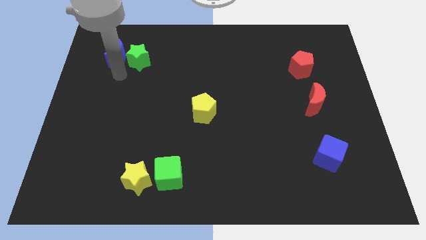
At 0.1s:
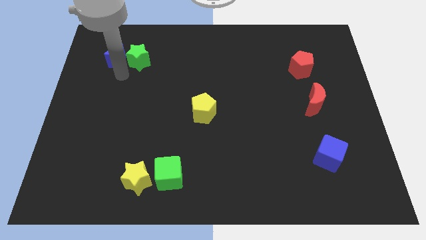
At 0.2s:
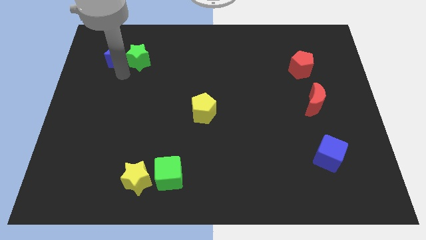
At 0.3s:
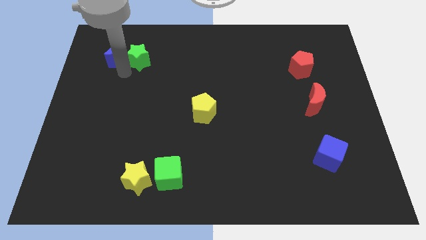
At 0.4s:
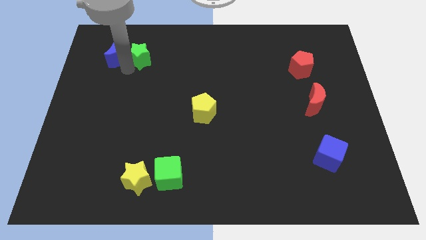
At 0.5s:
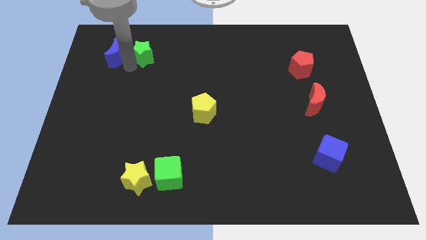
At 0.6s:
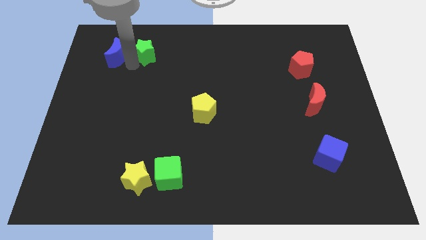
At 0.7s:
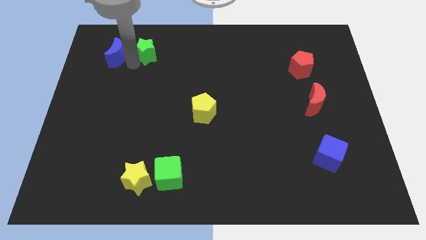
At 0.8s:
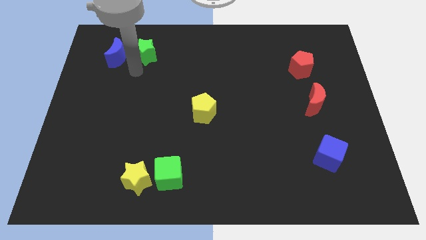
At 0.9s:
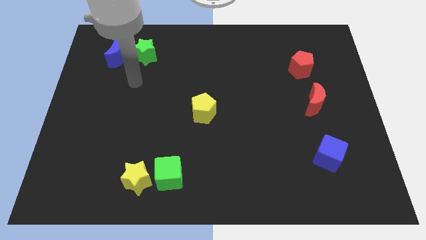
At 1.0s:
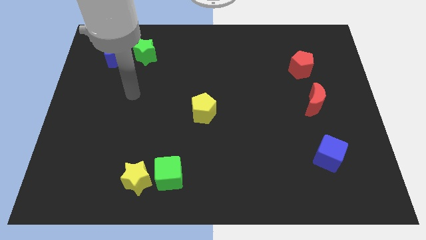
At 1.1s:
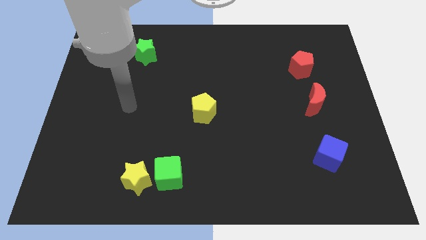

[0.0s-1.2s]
push the green star slightly to the top

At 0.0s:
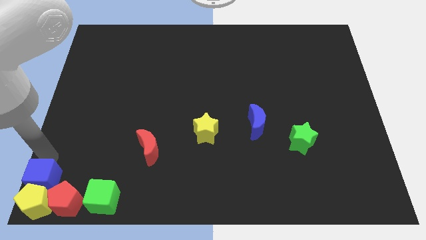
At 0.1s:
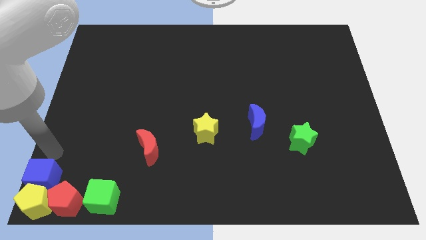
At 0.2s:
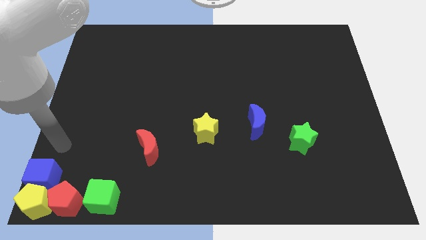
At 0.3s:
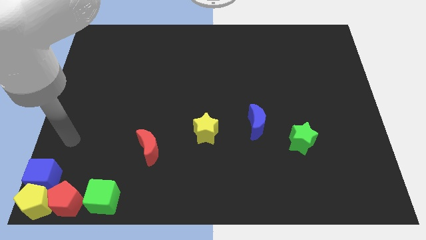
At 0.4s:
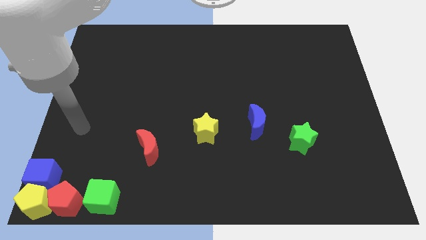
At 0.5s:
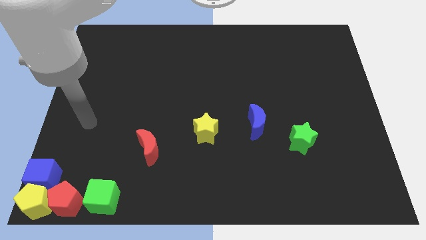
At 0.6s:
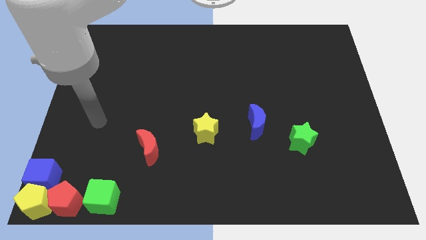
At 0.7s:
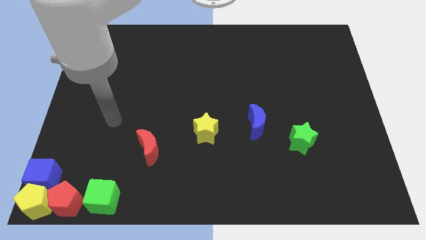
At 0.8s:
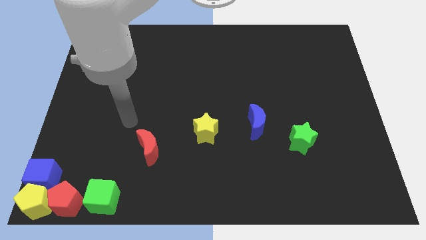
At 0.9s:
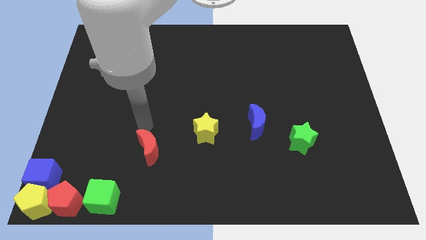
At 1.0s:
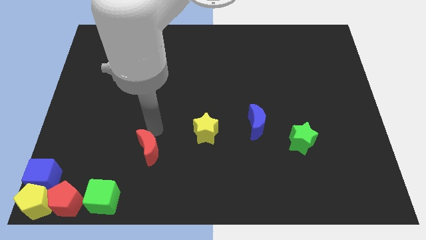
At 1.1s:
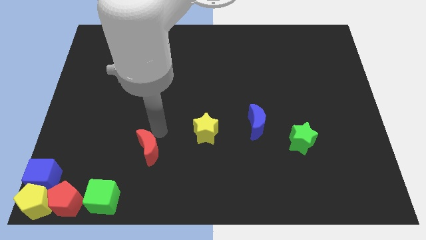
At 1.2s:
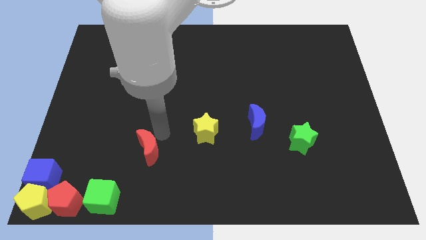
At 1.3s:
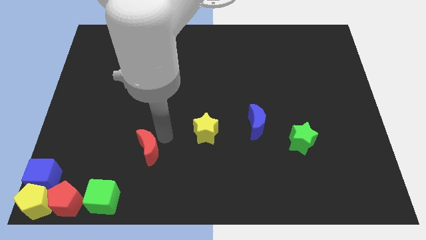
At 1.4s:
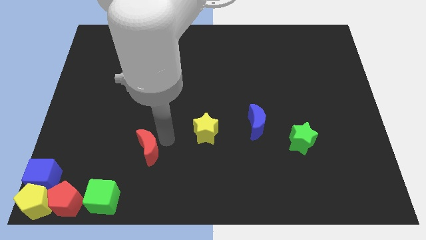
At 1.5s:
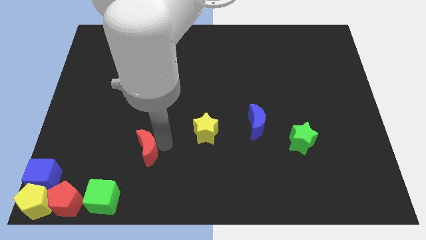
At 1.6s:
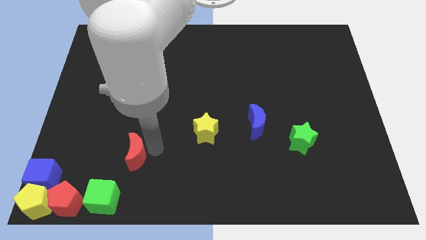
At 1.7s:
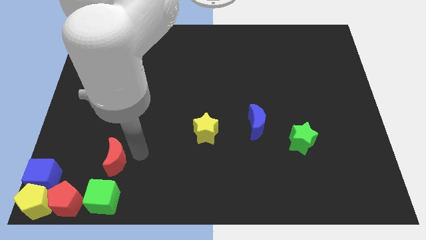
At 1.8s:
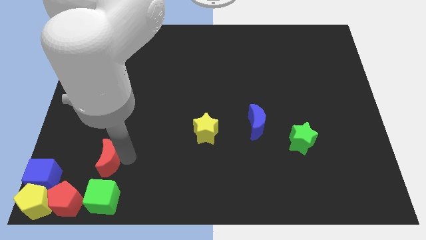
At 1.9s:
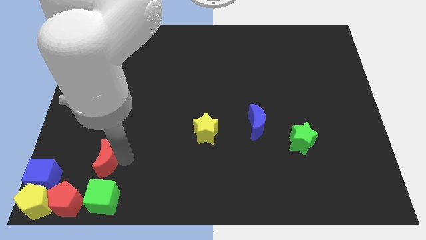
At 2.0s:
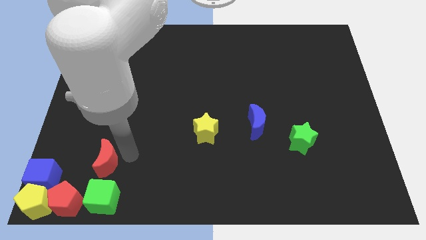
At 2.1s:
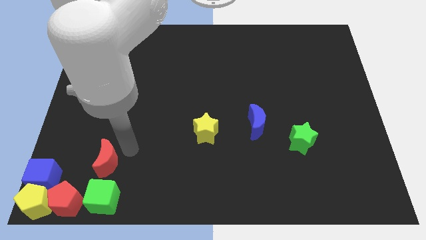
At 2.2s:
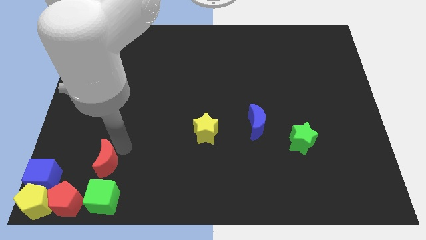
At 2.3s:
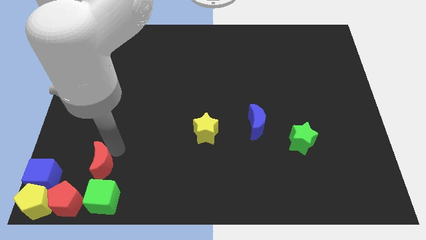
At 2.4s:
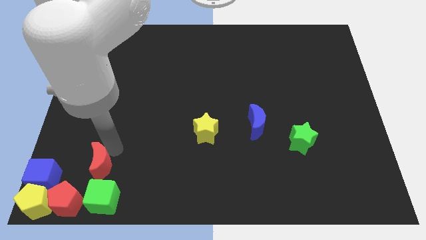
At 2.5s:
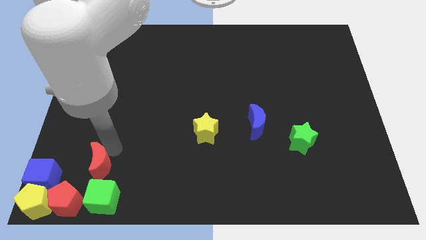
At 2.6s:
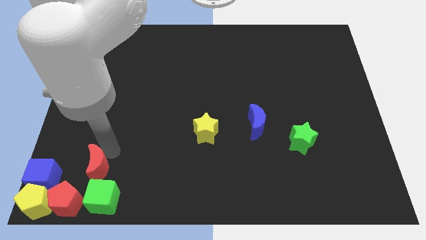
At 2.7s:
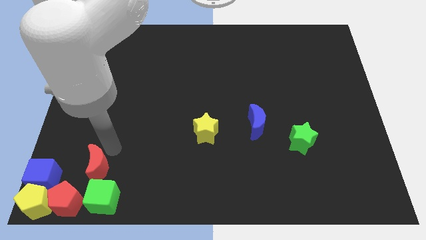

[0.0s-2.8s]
move the red moon above the green cube

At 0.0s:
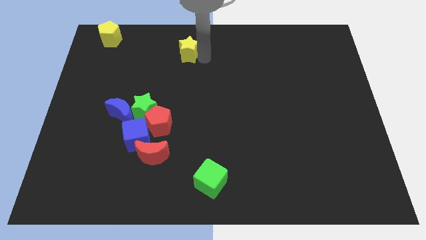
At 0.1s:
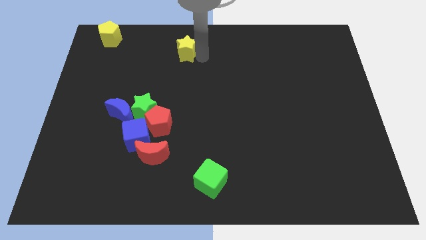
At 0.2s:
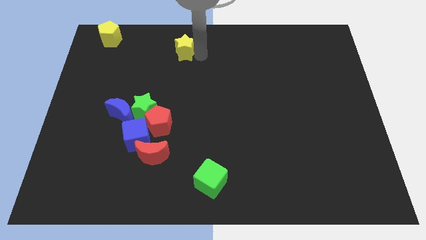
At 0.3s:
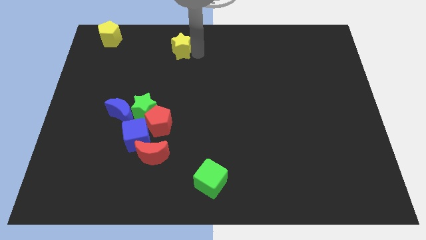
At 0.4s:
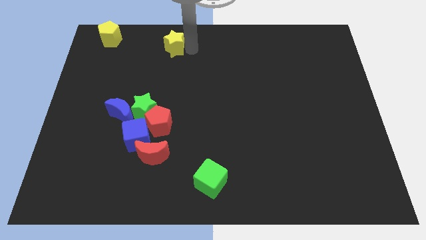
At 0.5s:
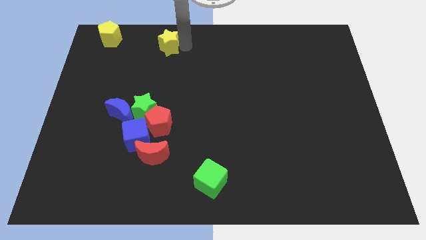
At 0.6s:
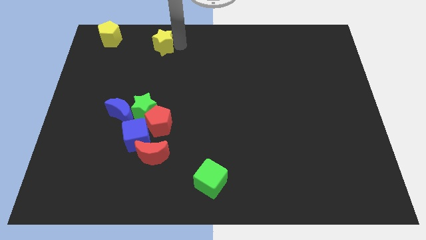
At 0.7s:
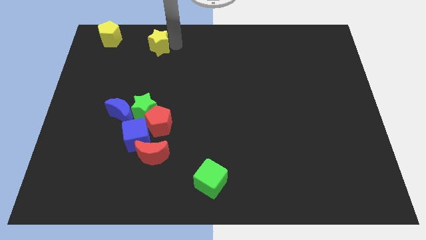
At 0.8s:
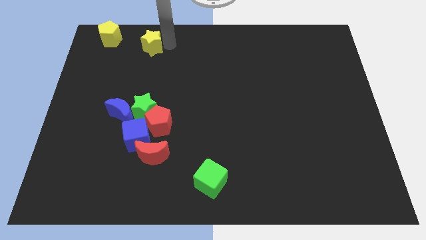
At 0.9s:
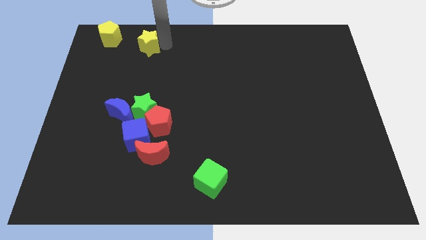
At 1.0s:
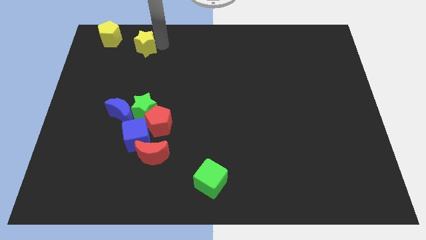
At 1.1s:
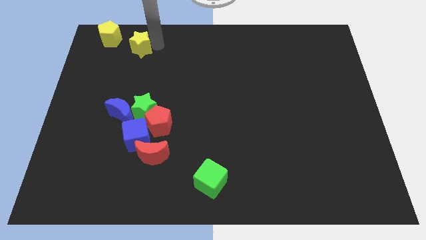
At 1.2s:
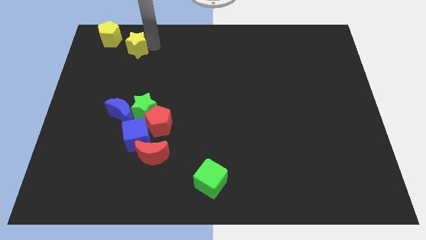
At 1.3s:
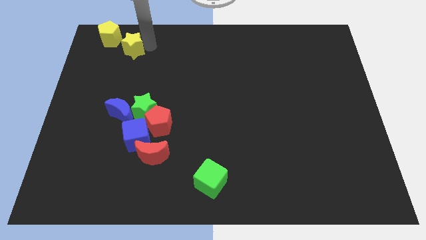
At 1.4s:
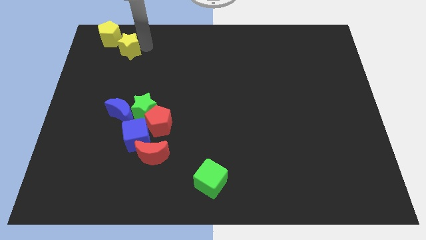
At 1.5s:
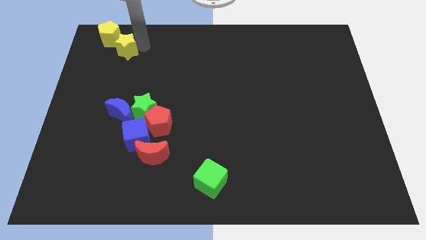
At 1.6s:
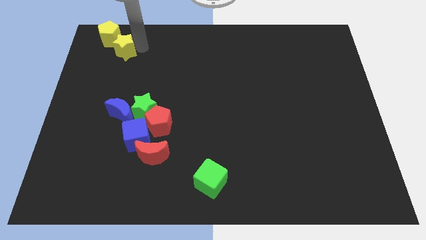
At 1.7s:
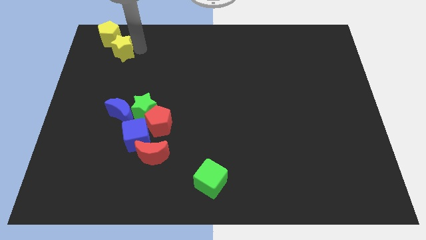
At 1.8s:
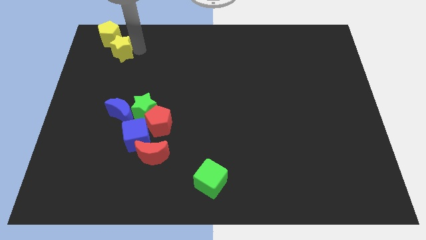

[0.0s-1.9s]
place the yellow star diagonally at the bottom right of the yellow pentagon

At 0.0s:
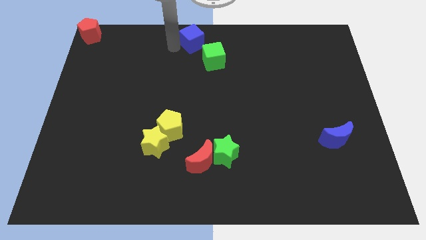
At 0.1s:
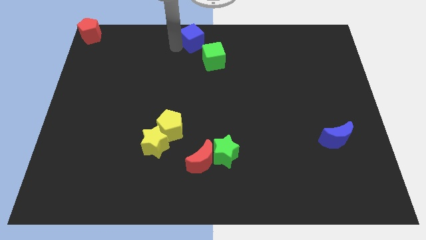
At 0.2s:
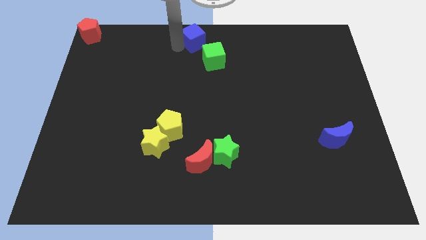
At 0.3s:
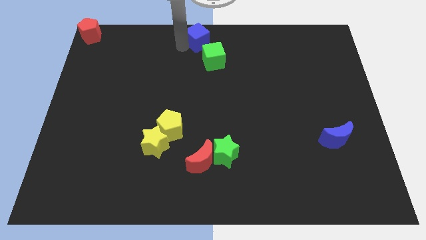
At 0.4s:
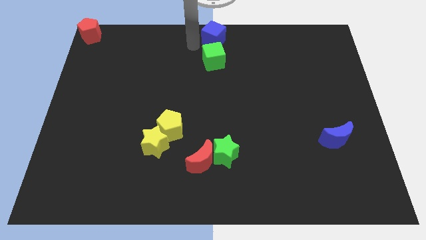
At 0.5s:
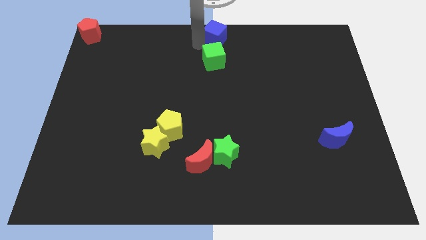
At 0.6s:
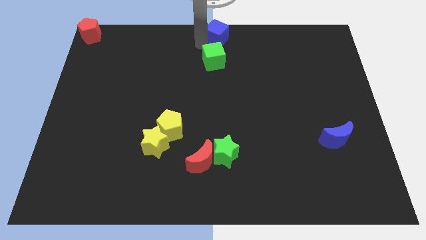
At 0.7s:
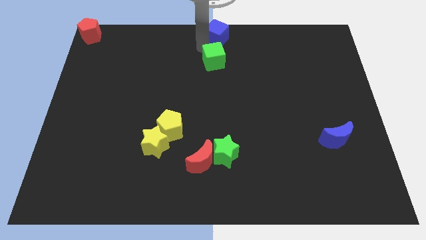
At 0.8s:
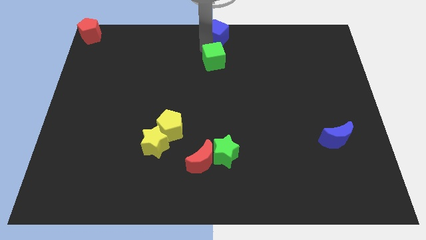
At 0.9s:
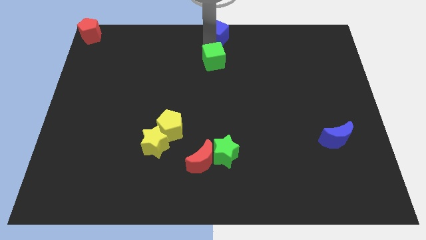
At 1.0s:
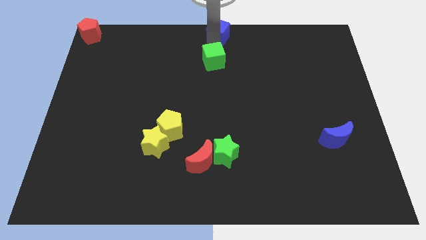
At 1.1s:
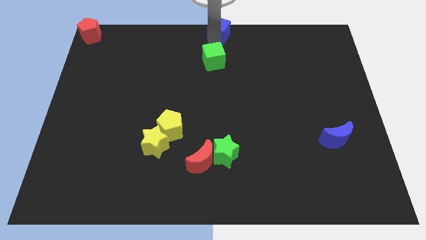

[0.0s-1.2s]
move the blue cube to the top center

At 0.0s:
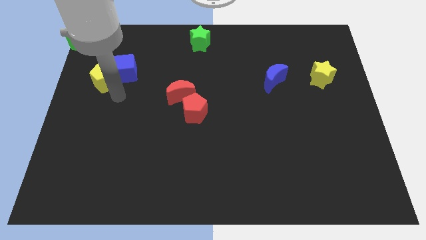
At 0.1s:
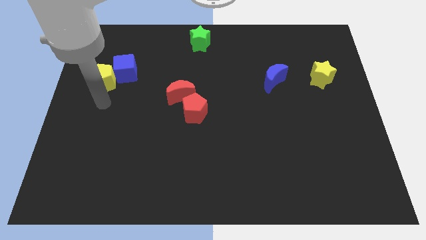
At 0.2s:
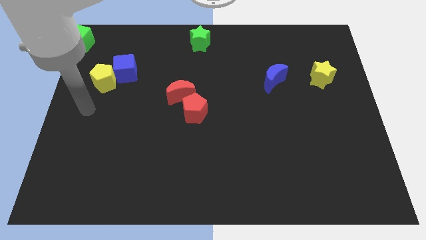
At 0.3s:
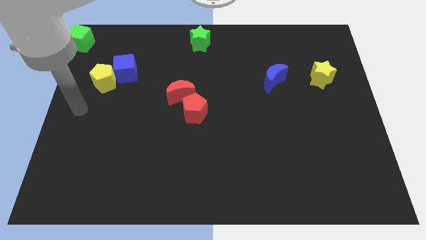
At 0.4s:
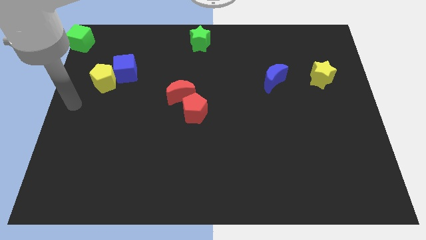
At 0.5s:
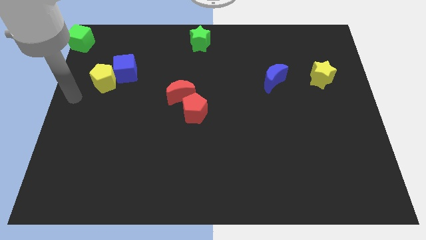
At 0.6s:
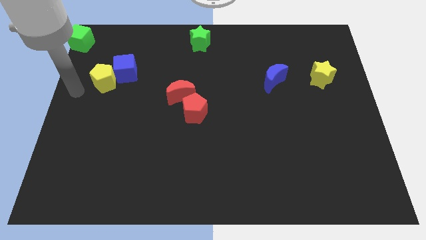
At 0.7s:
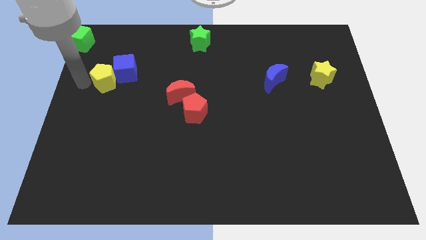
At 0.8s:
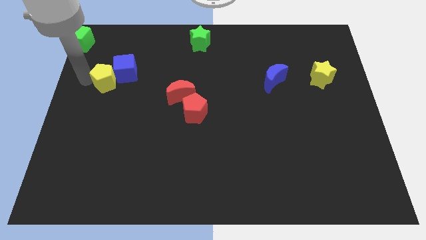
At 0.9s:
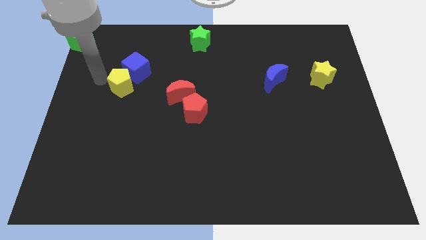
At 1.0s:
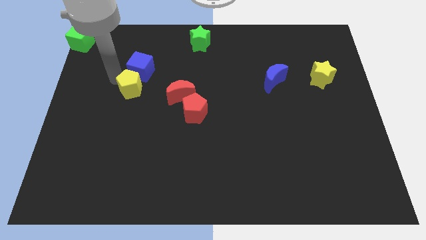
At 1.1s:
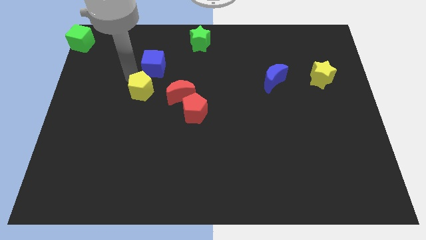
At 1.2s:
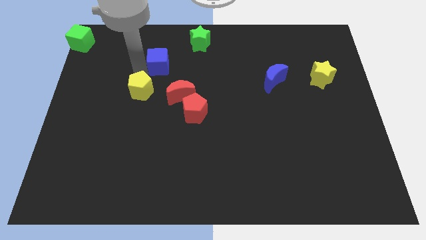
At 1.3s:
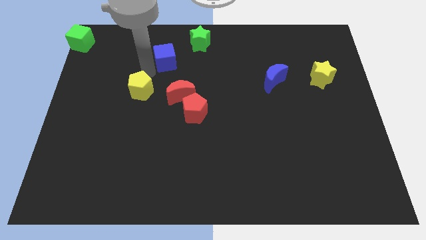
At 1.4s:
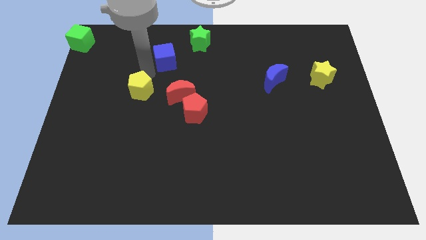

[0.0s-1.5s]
separate the yellow pentagon and blue cube
